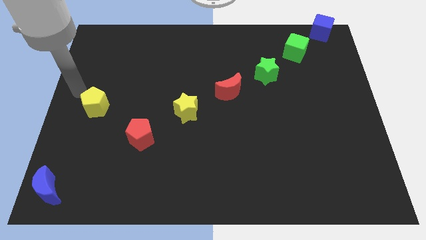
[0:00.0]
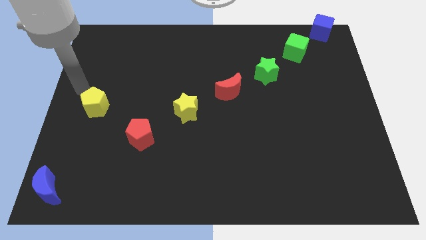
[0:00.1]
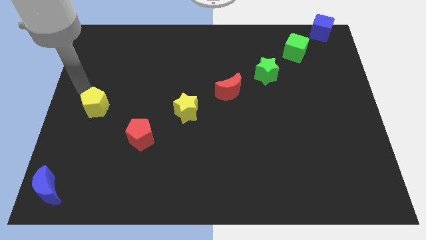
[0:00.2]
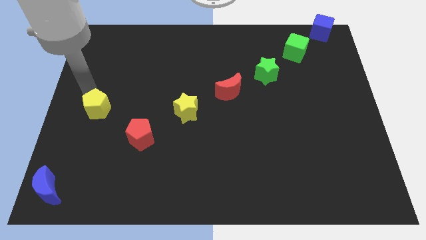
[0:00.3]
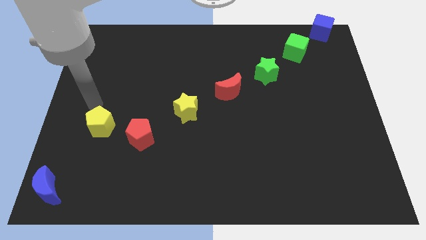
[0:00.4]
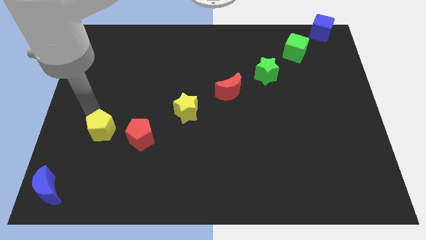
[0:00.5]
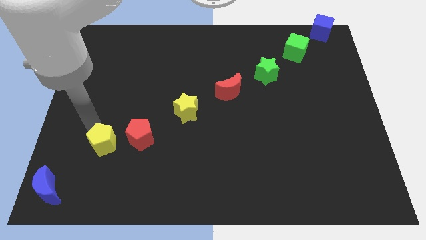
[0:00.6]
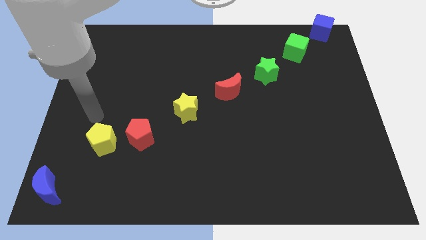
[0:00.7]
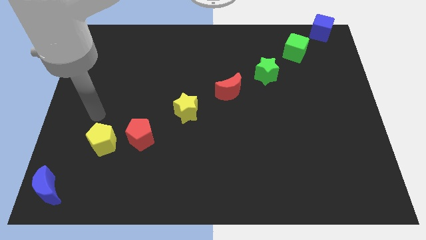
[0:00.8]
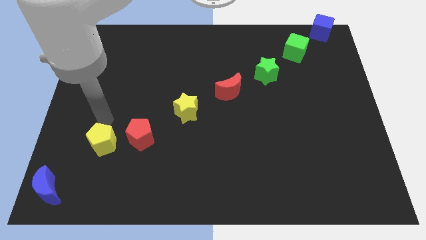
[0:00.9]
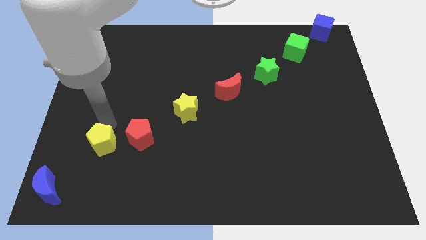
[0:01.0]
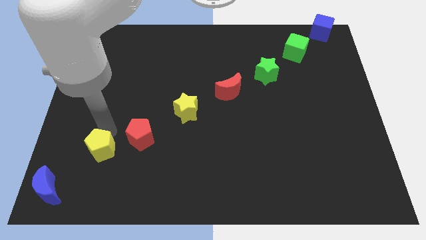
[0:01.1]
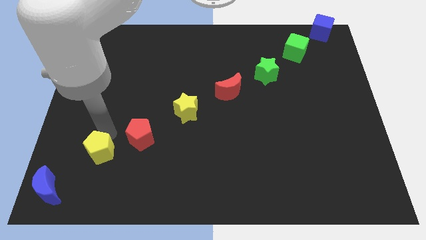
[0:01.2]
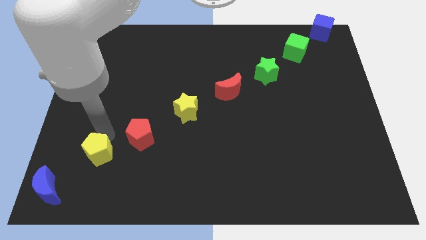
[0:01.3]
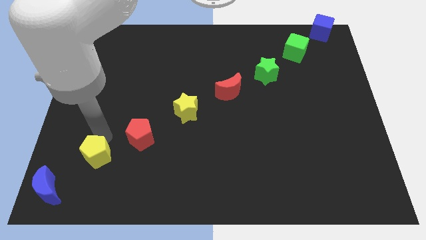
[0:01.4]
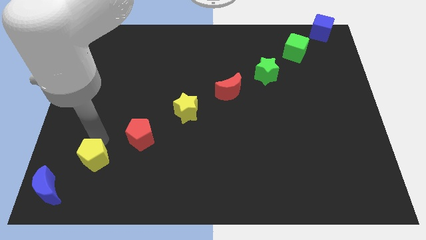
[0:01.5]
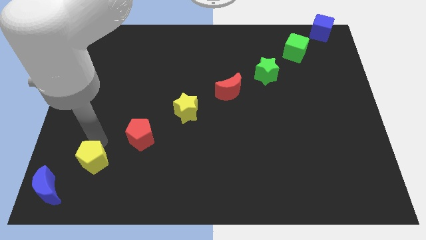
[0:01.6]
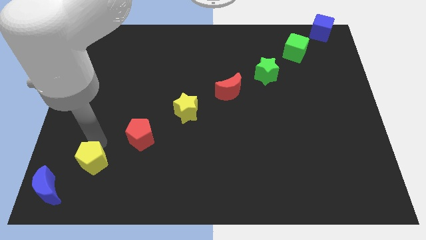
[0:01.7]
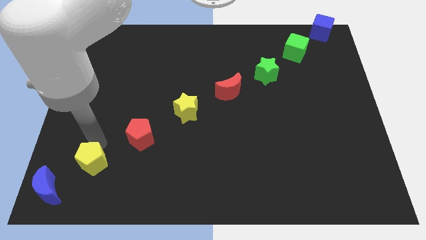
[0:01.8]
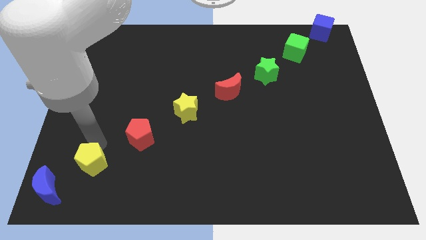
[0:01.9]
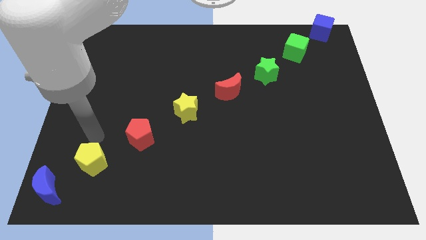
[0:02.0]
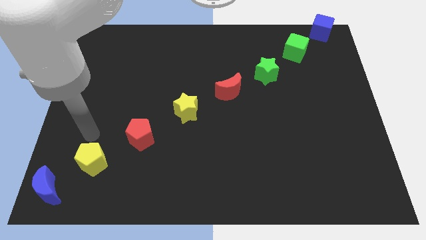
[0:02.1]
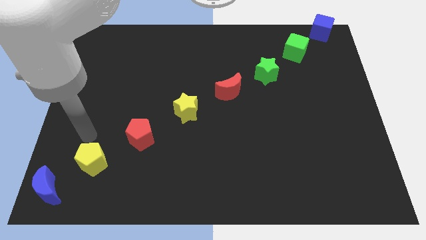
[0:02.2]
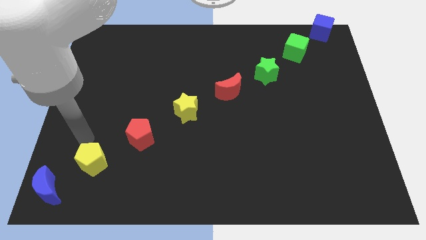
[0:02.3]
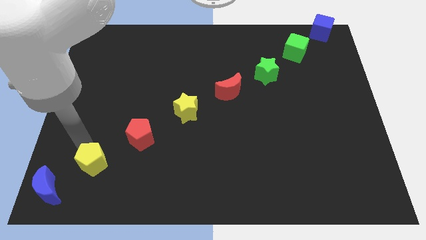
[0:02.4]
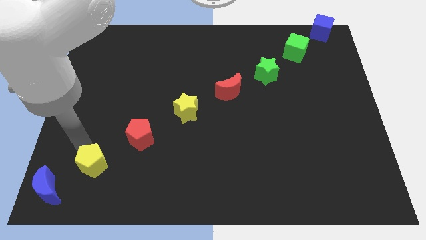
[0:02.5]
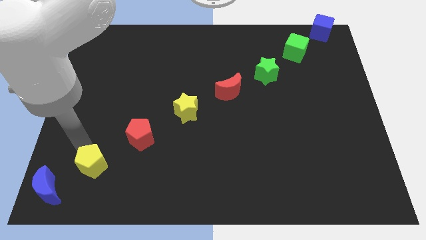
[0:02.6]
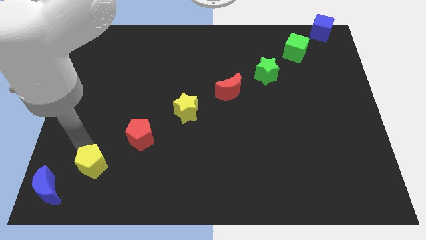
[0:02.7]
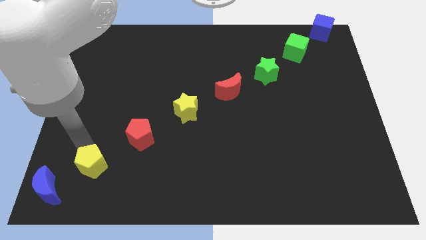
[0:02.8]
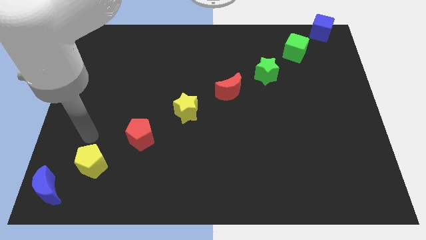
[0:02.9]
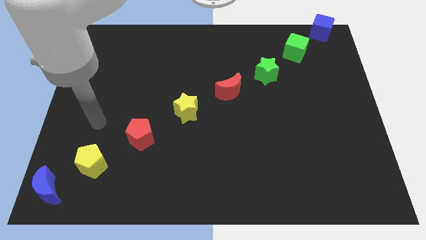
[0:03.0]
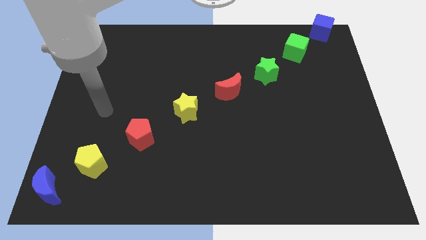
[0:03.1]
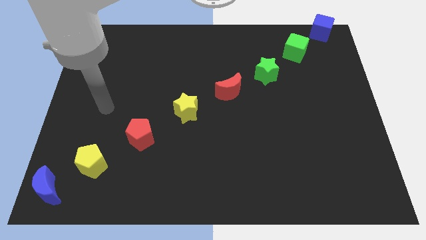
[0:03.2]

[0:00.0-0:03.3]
place the yellow pentagon in between red pentagon and blue crescent

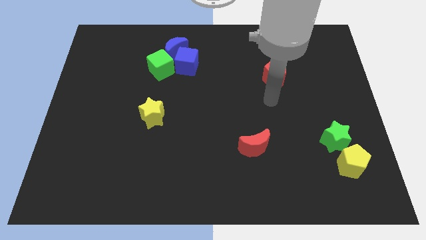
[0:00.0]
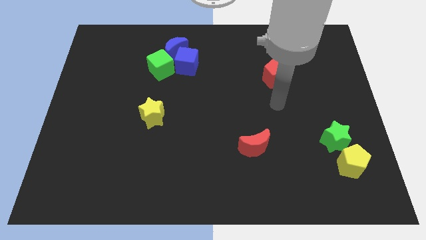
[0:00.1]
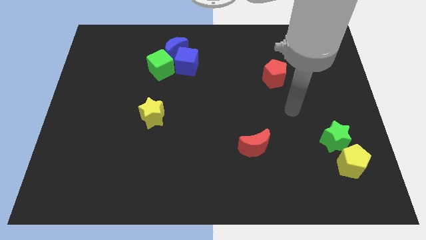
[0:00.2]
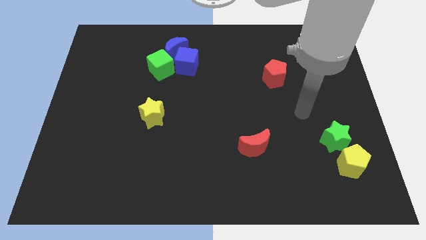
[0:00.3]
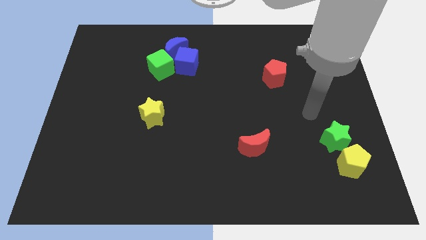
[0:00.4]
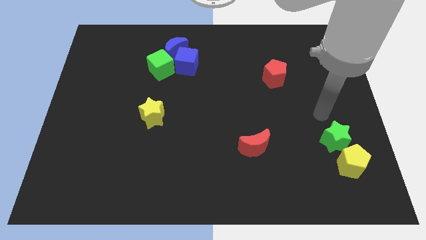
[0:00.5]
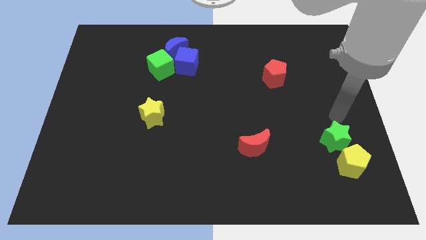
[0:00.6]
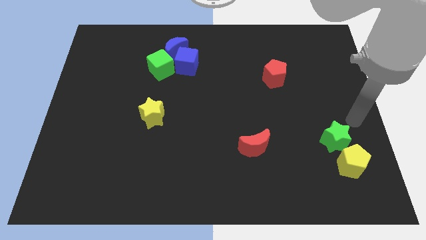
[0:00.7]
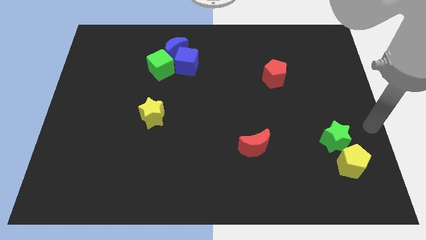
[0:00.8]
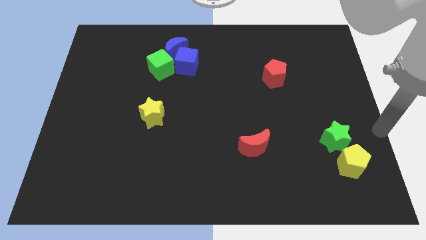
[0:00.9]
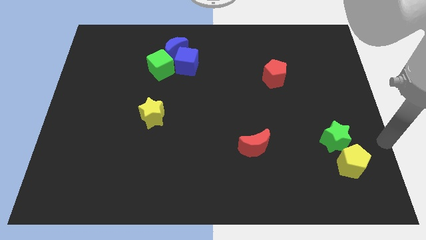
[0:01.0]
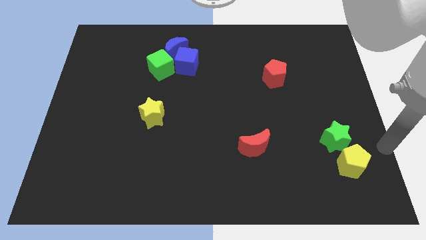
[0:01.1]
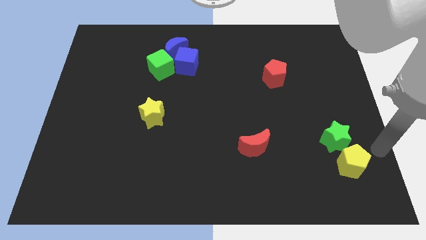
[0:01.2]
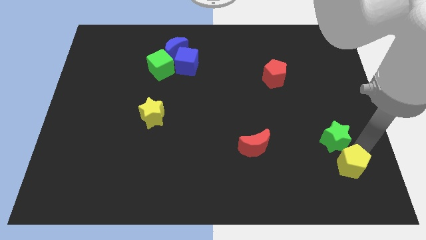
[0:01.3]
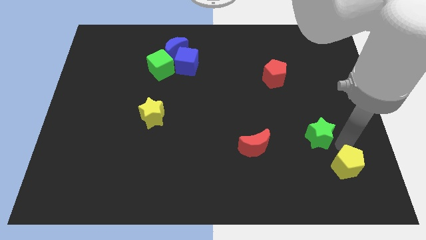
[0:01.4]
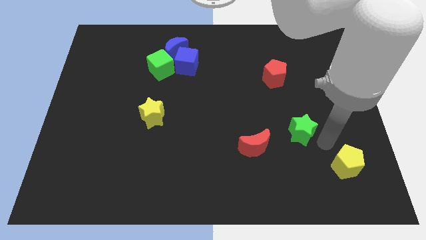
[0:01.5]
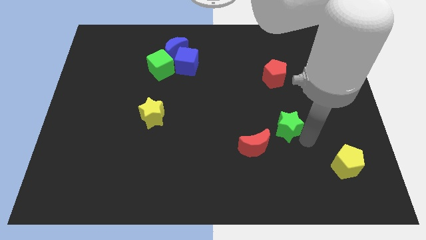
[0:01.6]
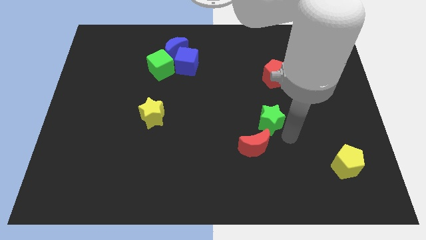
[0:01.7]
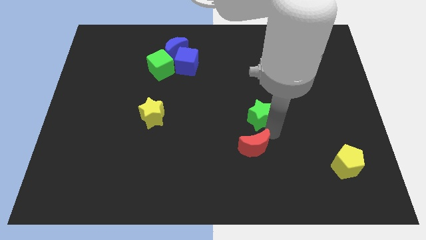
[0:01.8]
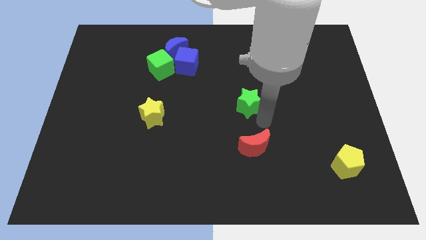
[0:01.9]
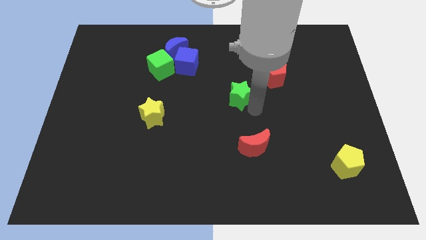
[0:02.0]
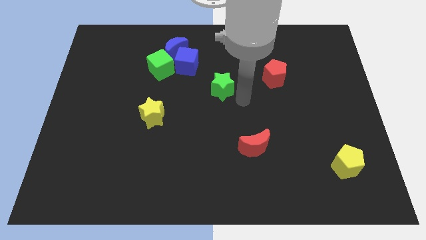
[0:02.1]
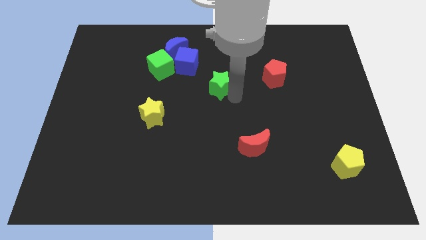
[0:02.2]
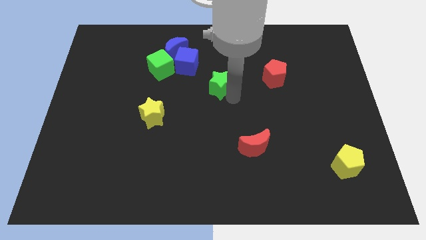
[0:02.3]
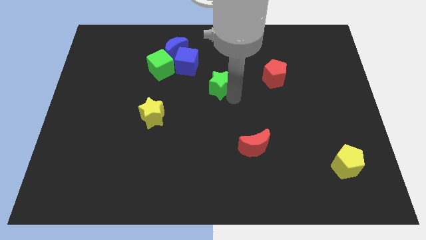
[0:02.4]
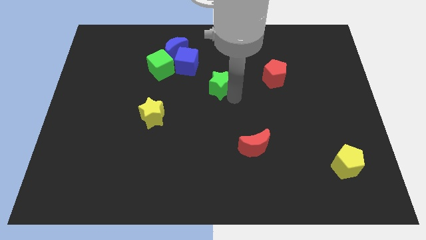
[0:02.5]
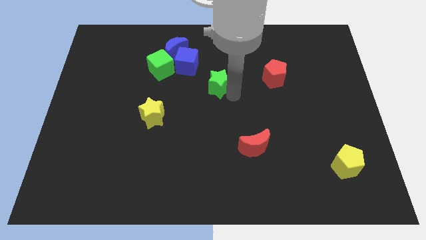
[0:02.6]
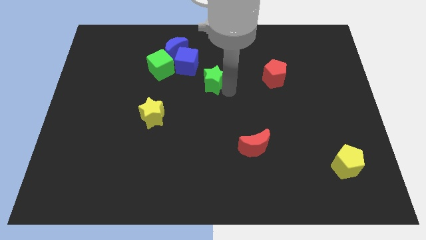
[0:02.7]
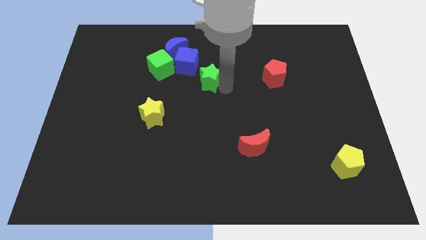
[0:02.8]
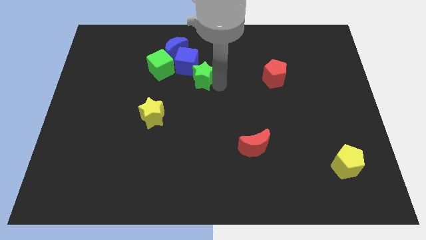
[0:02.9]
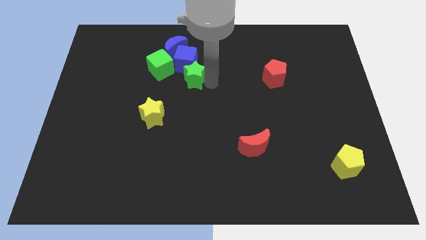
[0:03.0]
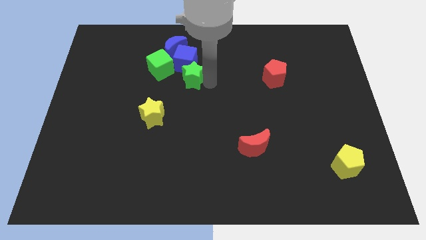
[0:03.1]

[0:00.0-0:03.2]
separate green star from yellow pentagon

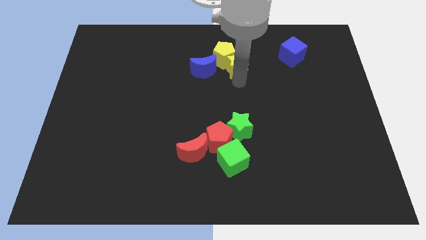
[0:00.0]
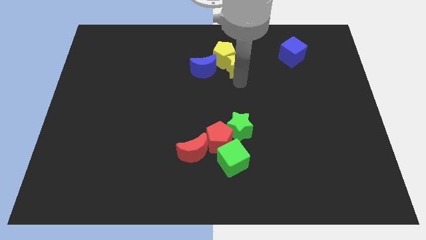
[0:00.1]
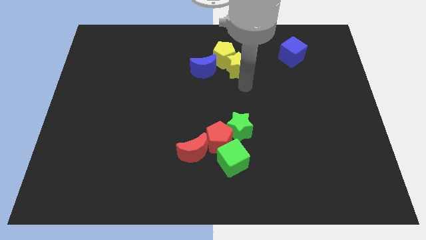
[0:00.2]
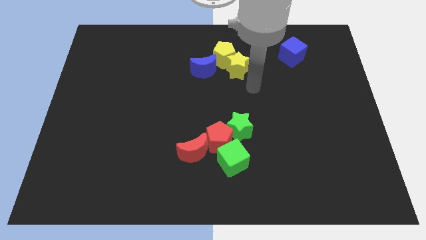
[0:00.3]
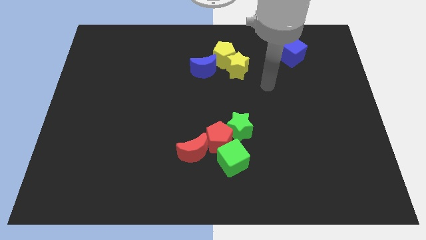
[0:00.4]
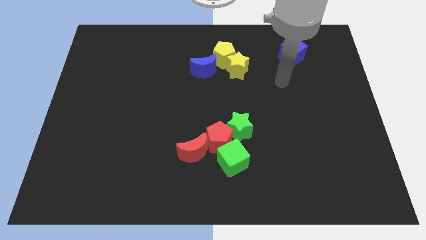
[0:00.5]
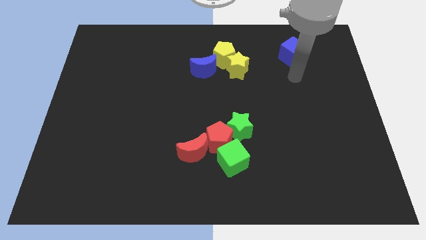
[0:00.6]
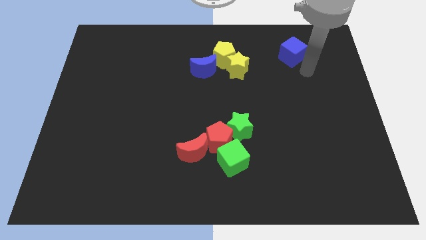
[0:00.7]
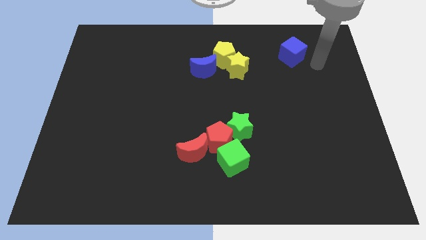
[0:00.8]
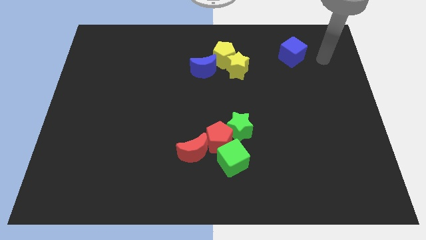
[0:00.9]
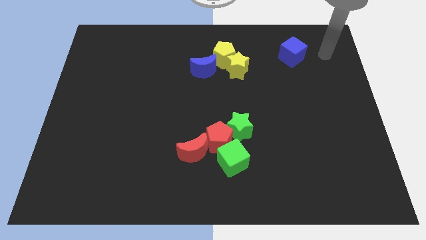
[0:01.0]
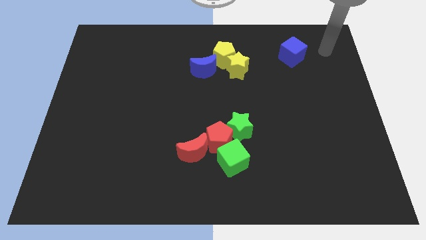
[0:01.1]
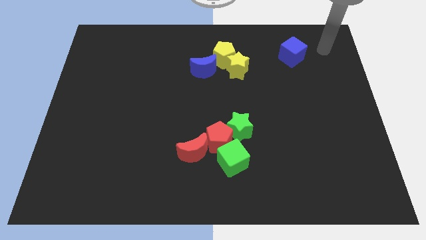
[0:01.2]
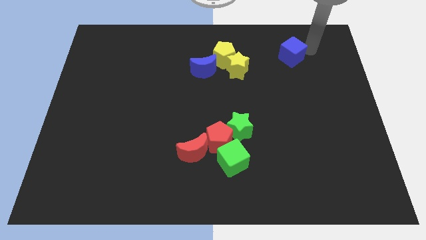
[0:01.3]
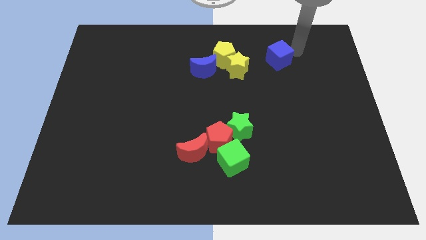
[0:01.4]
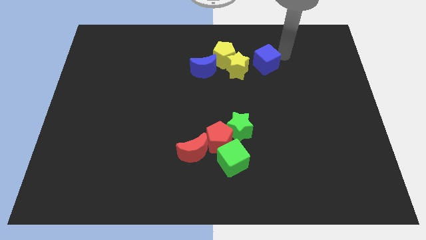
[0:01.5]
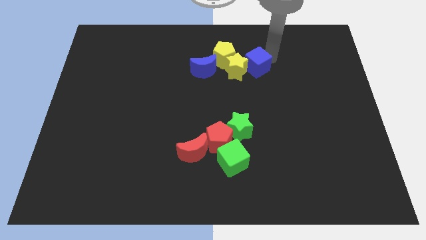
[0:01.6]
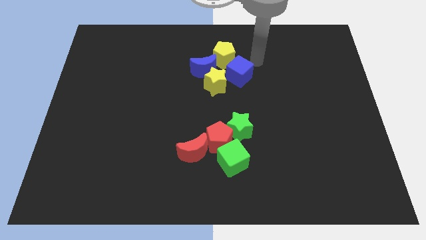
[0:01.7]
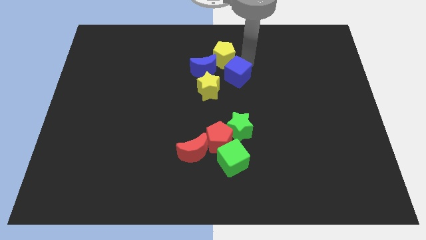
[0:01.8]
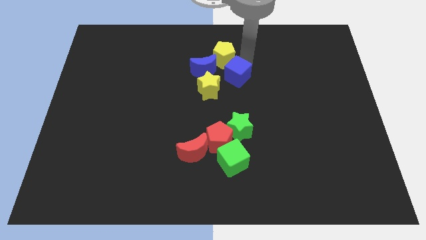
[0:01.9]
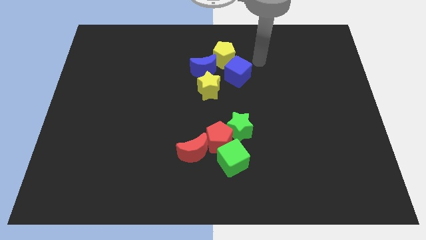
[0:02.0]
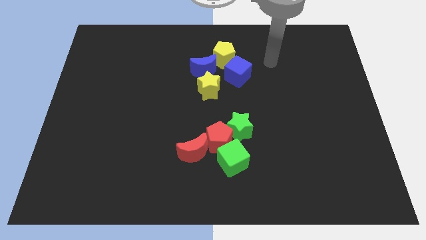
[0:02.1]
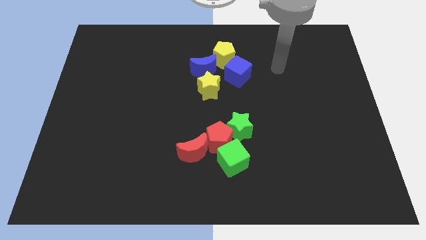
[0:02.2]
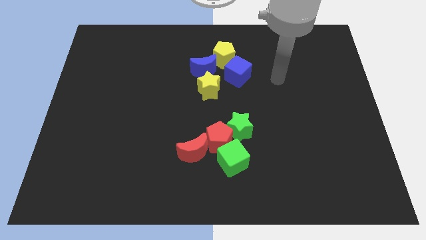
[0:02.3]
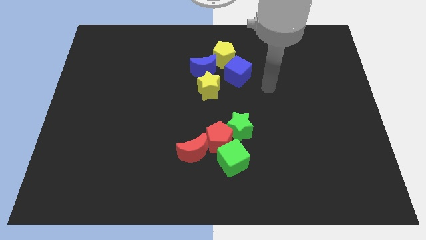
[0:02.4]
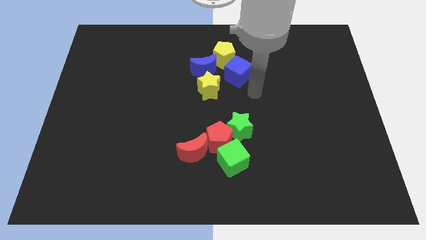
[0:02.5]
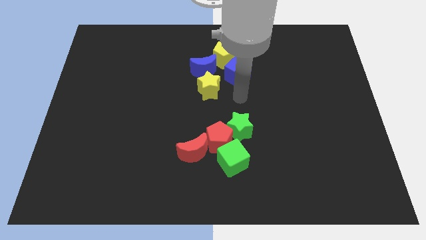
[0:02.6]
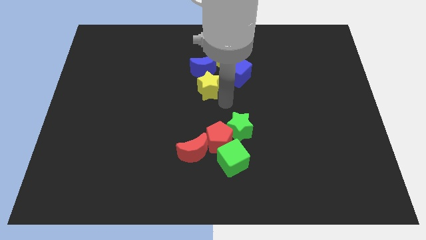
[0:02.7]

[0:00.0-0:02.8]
slide the blue cube vertically at the top side of the green star
